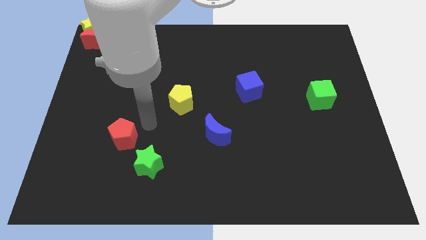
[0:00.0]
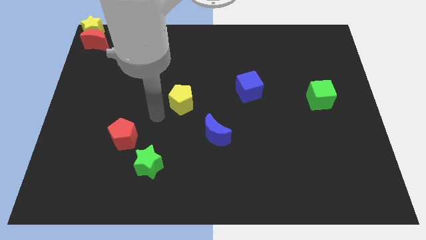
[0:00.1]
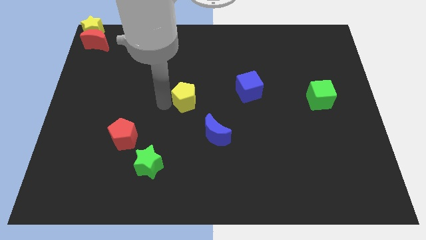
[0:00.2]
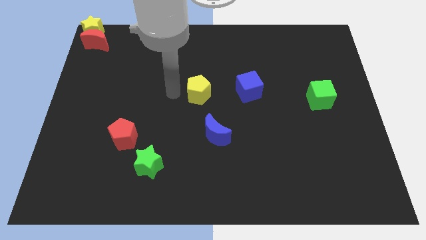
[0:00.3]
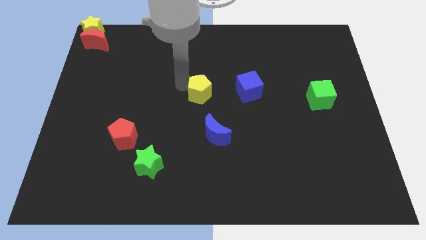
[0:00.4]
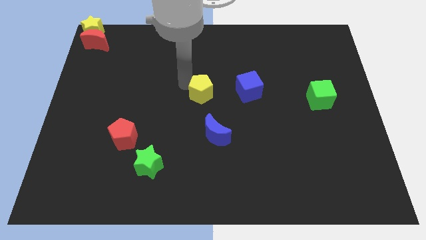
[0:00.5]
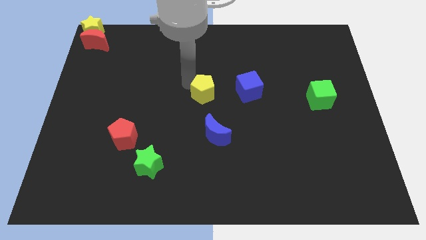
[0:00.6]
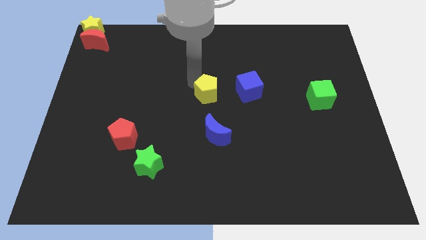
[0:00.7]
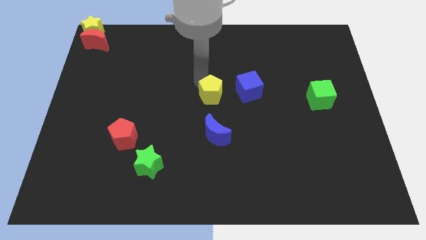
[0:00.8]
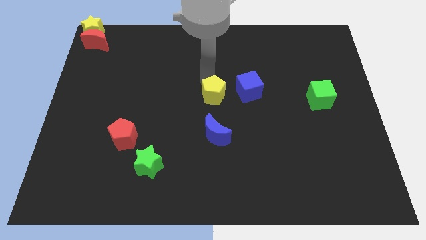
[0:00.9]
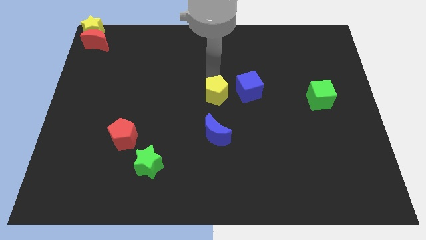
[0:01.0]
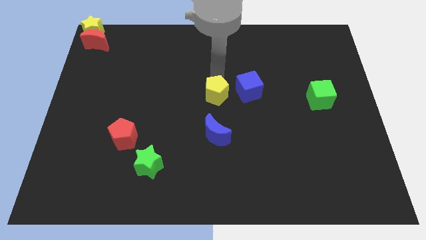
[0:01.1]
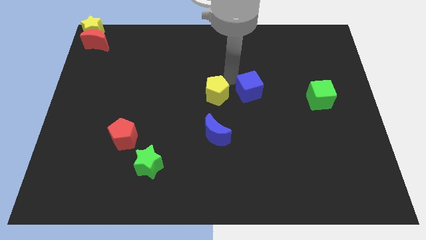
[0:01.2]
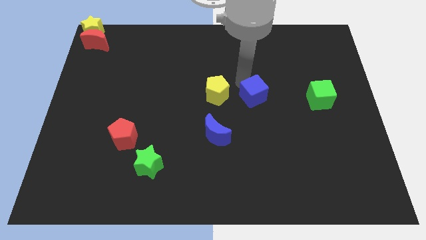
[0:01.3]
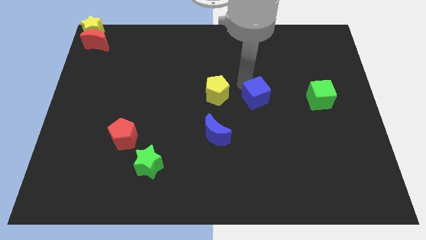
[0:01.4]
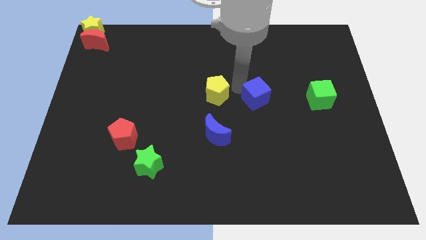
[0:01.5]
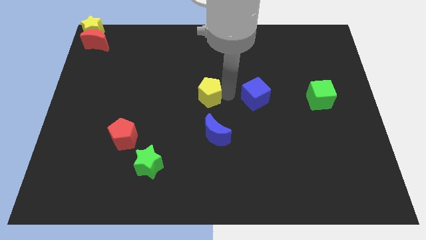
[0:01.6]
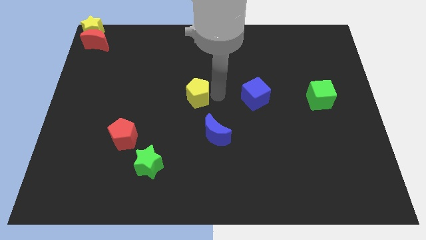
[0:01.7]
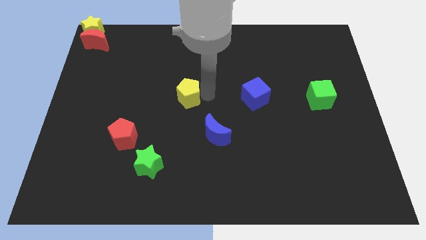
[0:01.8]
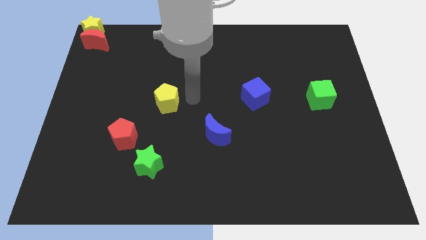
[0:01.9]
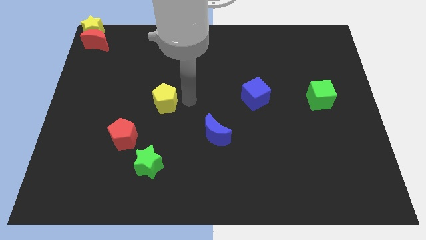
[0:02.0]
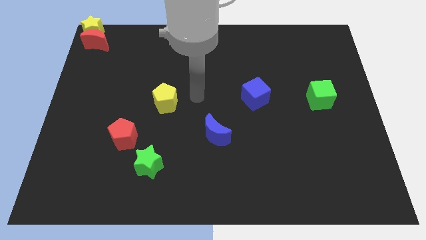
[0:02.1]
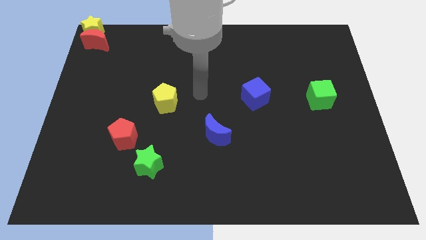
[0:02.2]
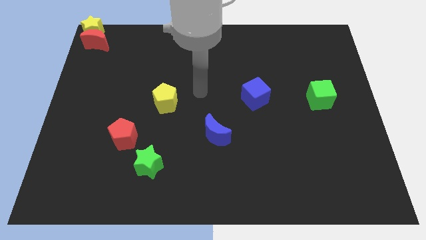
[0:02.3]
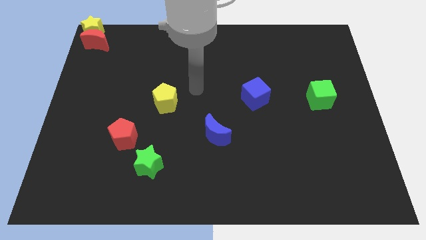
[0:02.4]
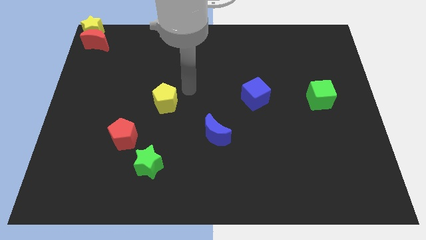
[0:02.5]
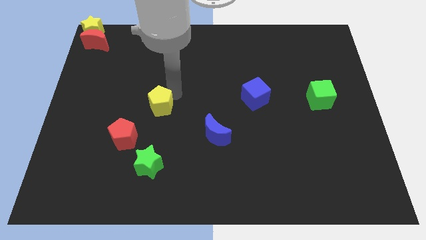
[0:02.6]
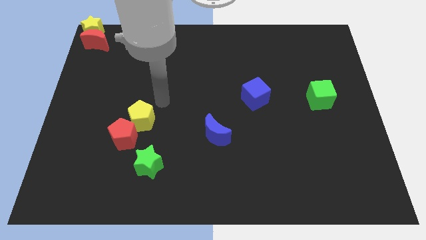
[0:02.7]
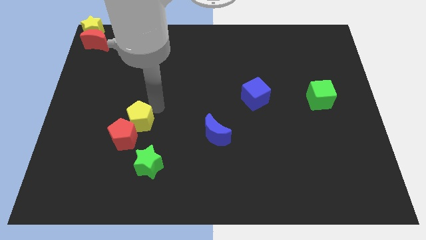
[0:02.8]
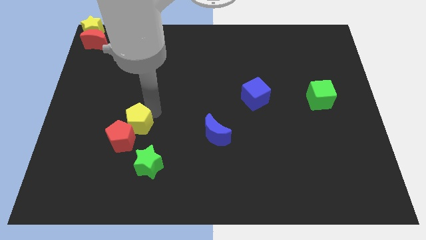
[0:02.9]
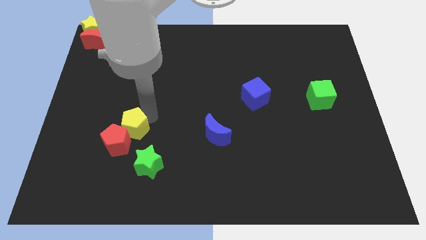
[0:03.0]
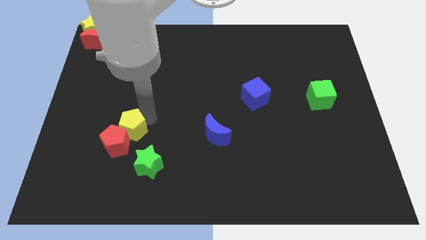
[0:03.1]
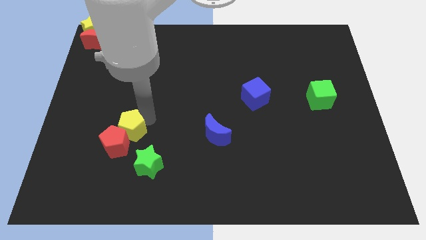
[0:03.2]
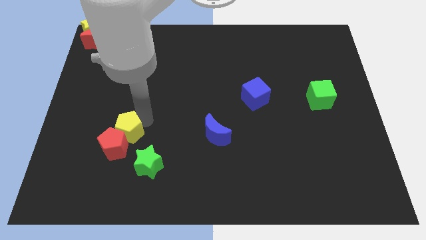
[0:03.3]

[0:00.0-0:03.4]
push the yellow pentagon to the top right side of the red pentagon

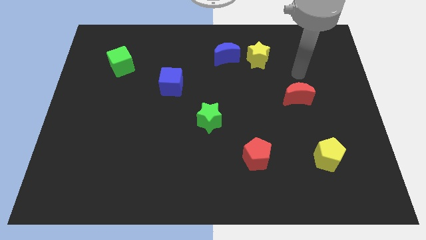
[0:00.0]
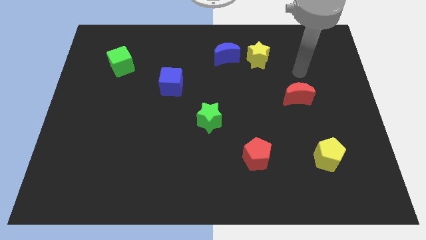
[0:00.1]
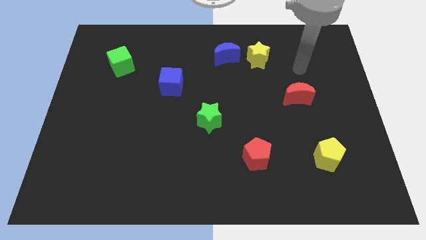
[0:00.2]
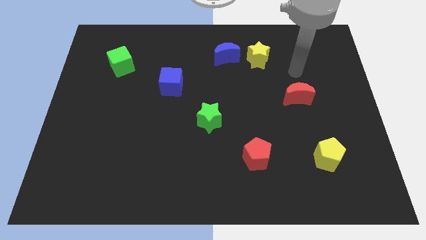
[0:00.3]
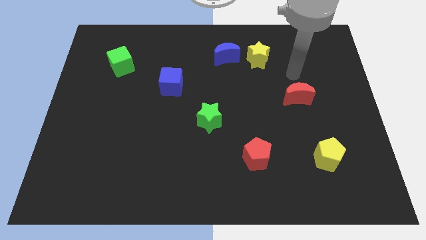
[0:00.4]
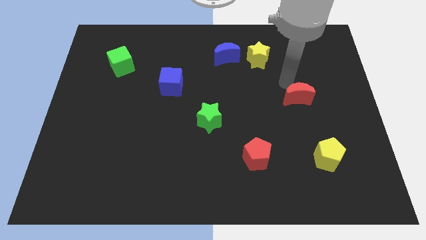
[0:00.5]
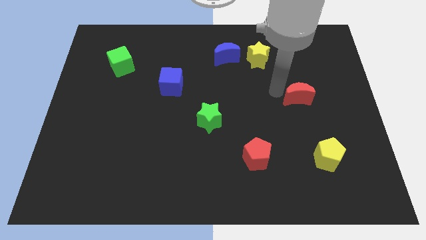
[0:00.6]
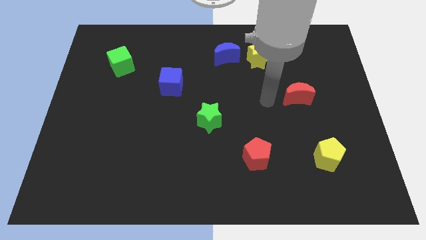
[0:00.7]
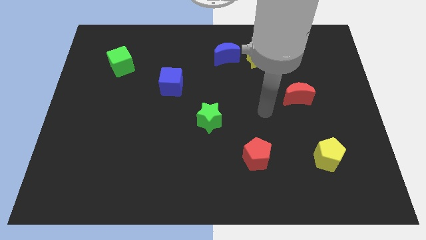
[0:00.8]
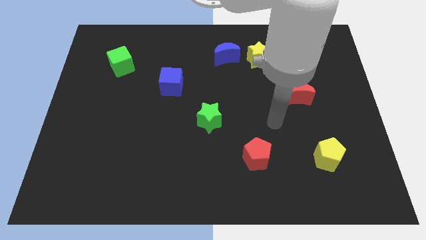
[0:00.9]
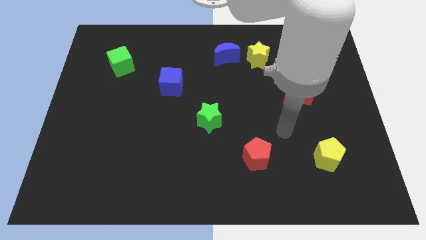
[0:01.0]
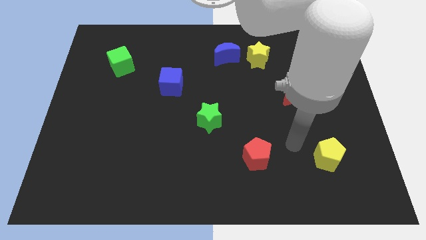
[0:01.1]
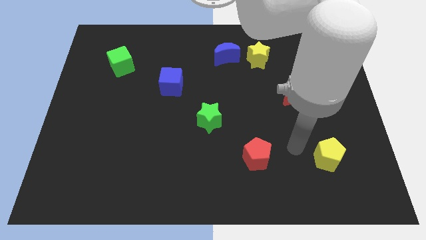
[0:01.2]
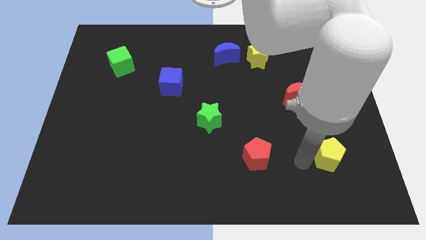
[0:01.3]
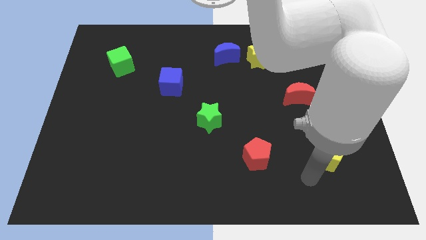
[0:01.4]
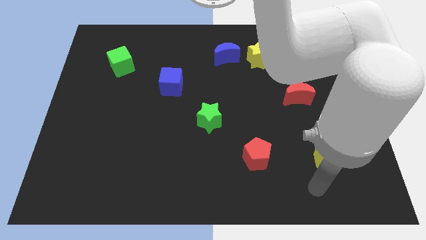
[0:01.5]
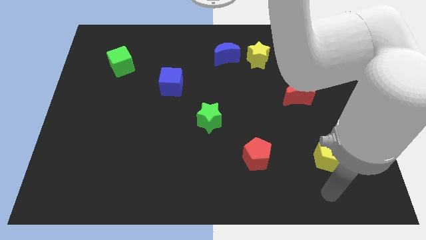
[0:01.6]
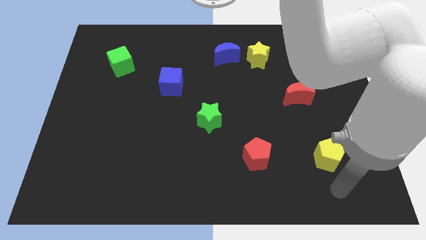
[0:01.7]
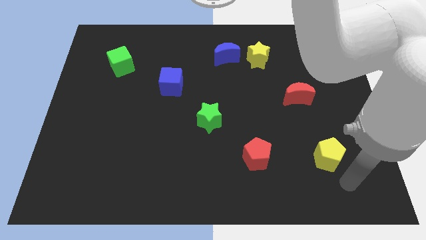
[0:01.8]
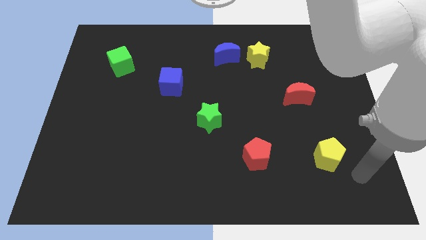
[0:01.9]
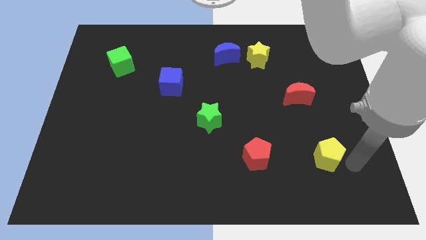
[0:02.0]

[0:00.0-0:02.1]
point your arm to the right side of the yellow pentagon

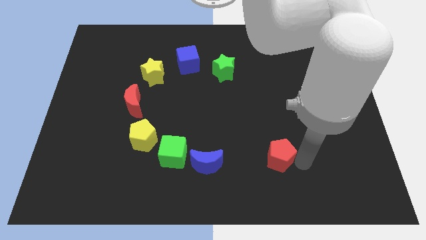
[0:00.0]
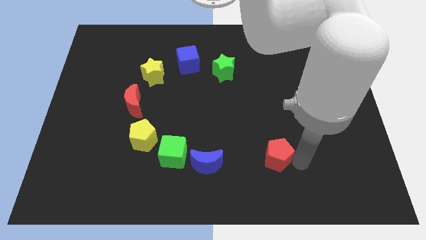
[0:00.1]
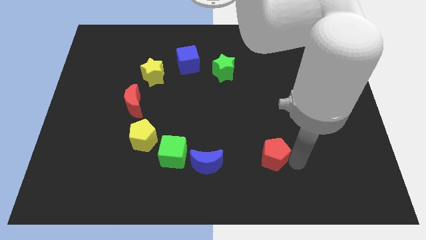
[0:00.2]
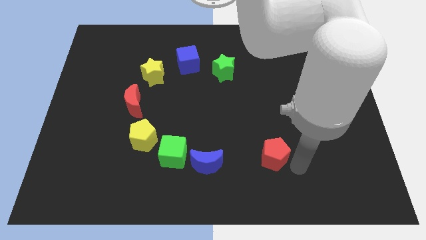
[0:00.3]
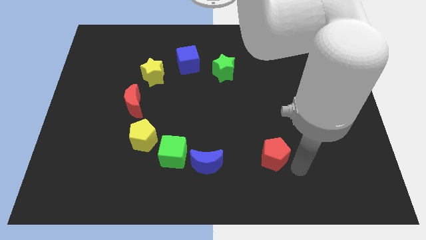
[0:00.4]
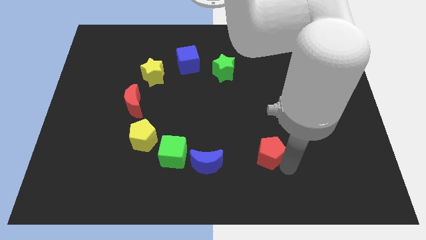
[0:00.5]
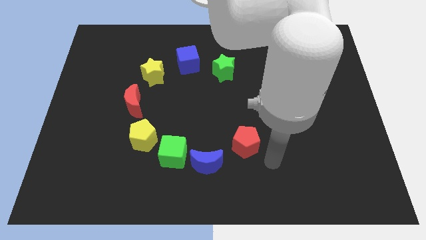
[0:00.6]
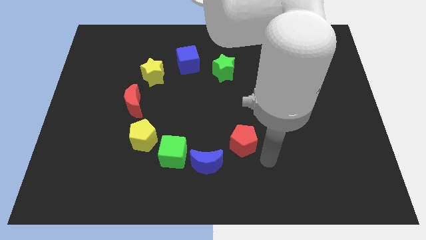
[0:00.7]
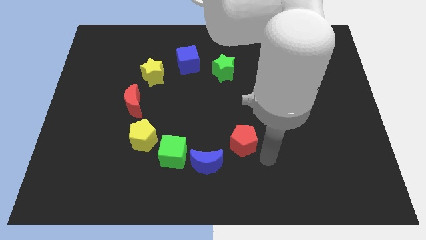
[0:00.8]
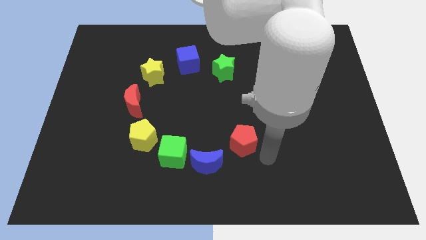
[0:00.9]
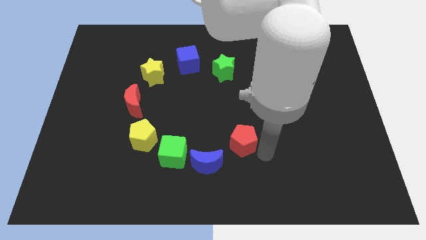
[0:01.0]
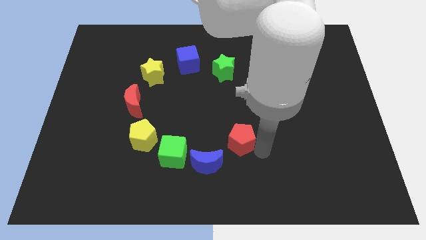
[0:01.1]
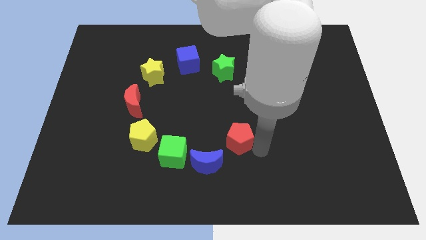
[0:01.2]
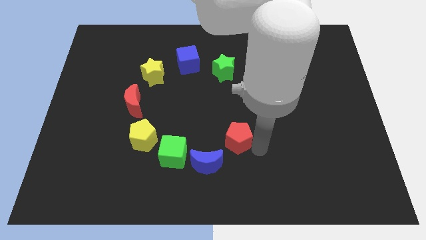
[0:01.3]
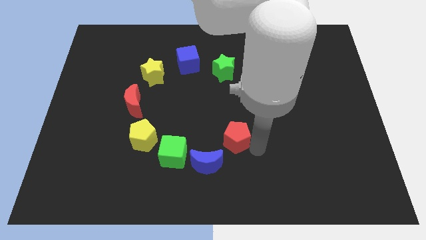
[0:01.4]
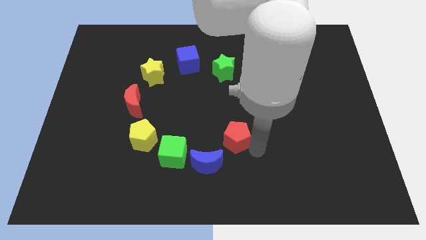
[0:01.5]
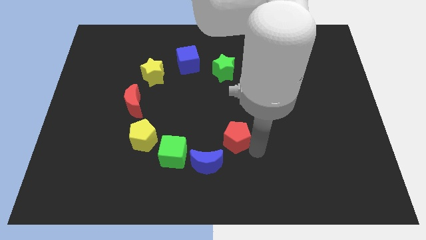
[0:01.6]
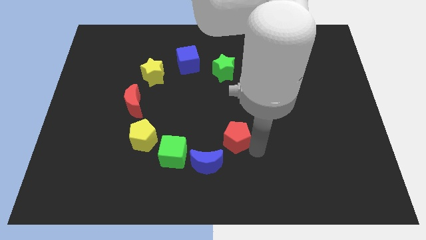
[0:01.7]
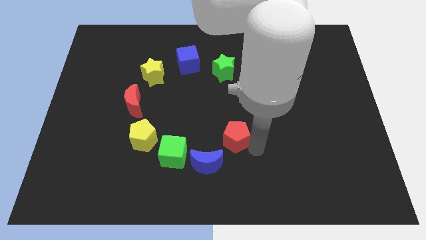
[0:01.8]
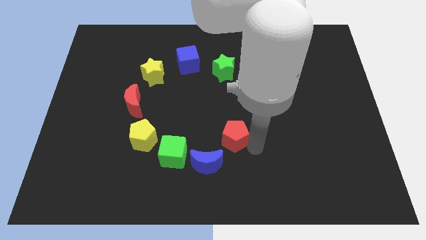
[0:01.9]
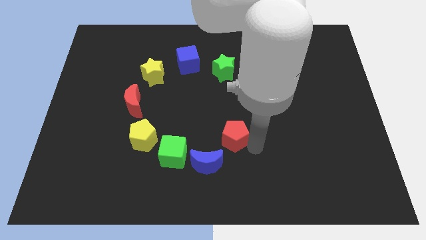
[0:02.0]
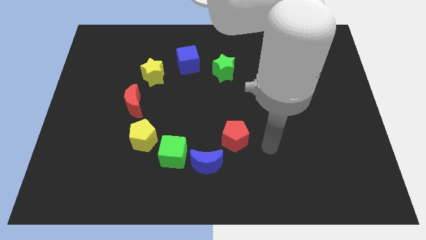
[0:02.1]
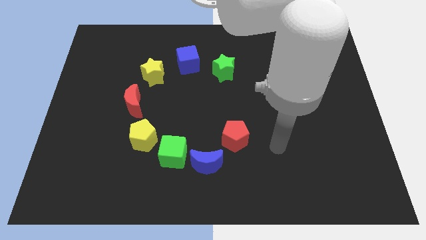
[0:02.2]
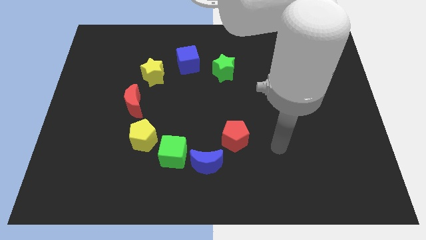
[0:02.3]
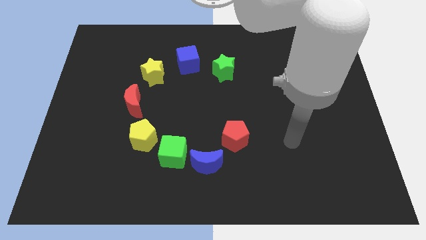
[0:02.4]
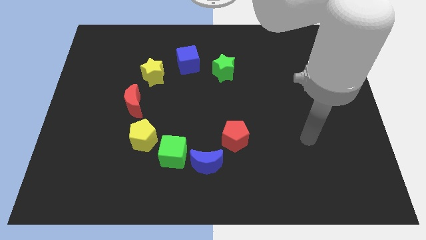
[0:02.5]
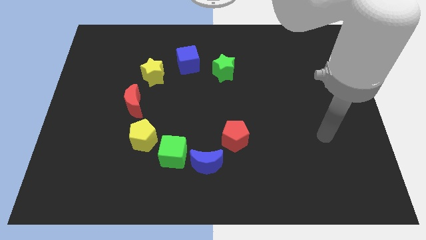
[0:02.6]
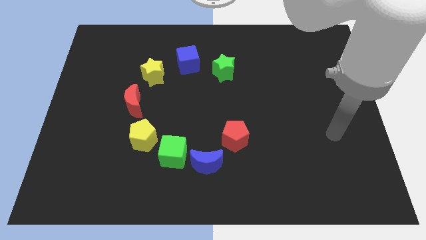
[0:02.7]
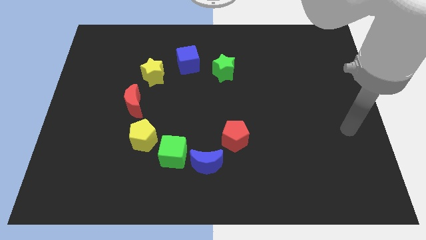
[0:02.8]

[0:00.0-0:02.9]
push red pentagon to the top right side of the blue crescent

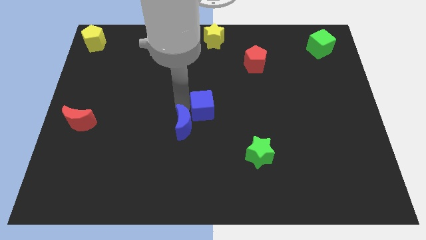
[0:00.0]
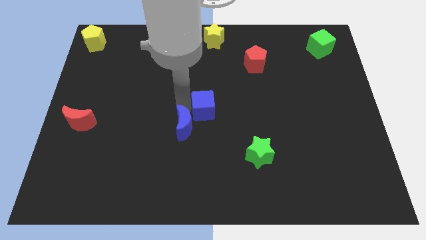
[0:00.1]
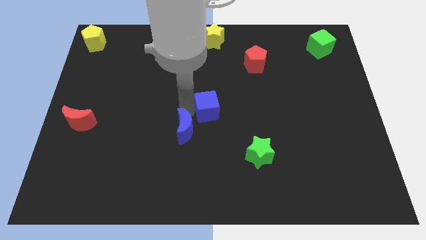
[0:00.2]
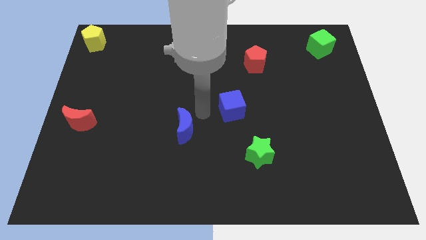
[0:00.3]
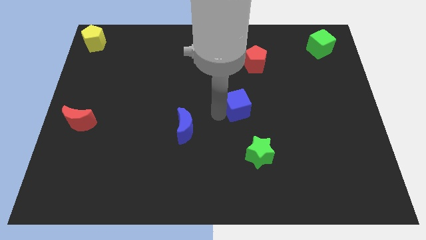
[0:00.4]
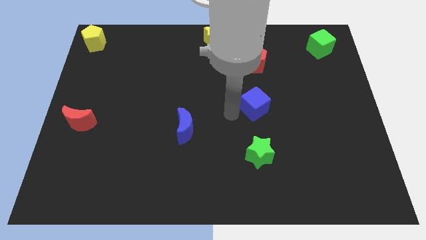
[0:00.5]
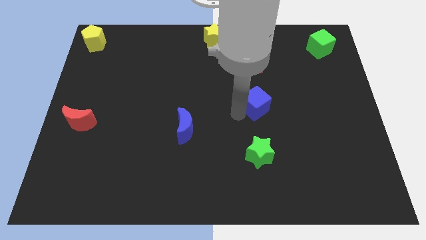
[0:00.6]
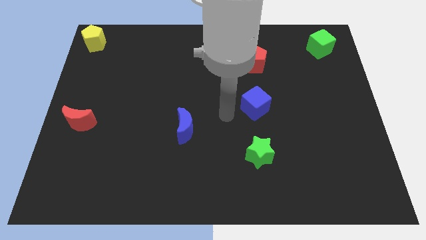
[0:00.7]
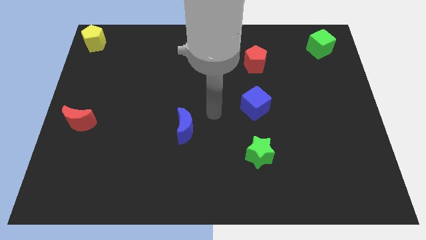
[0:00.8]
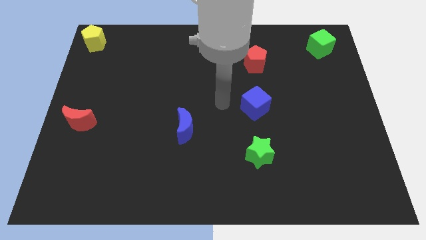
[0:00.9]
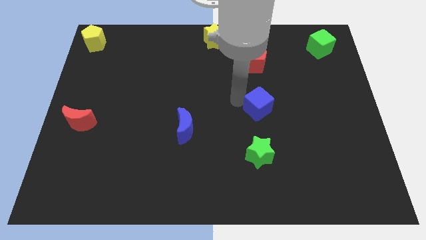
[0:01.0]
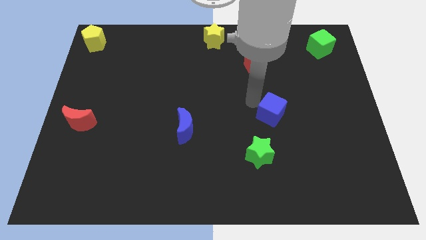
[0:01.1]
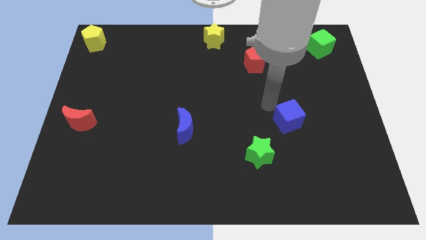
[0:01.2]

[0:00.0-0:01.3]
separate the blue cube from the blue crescent
